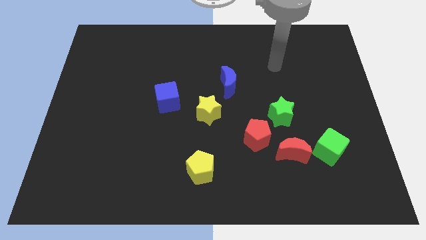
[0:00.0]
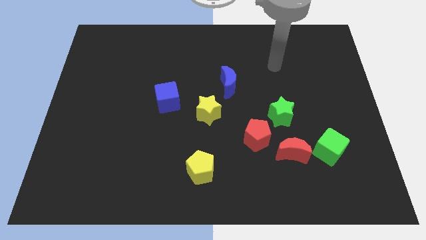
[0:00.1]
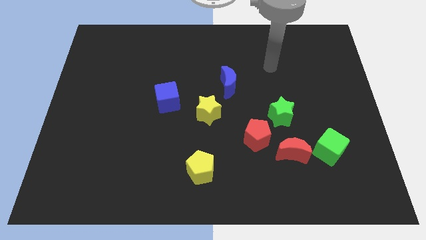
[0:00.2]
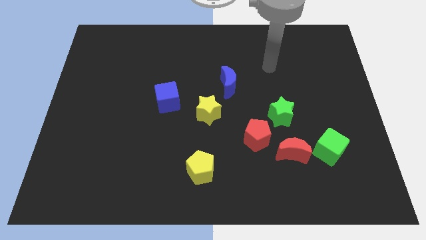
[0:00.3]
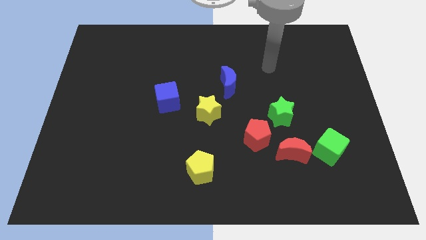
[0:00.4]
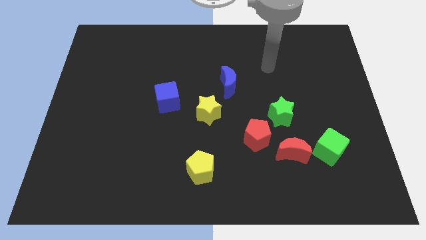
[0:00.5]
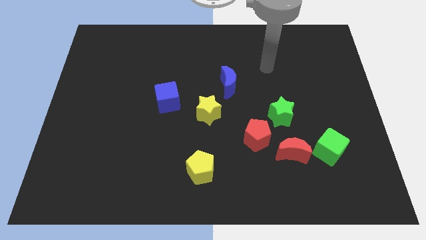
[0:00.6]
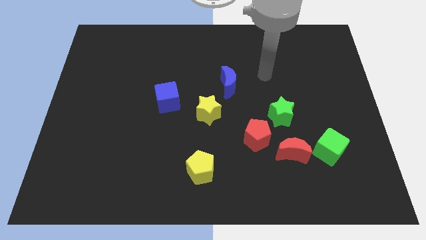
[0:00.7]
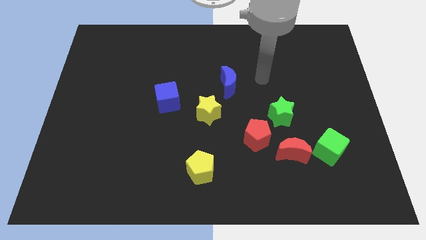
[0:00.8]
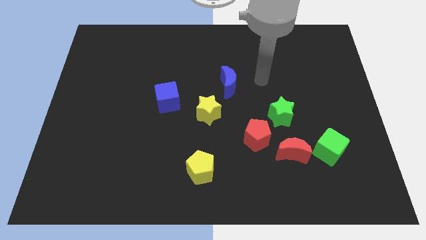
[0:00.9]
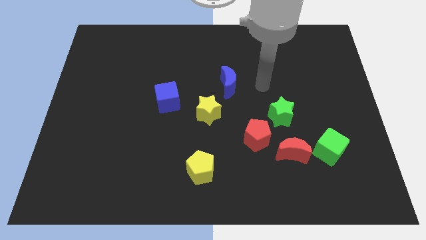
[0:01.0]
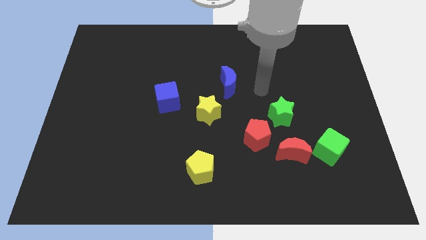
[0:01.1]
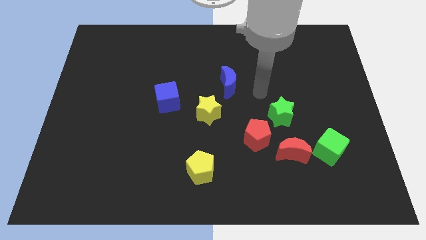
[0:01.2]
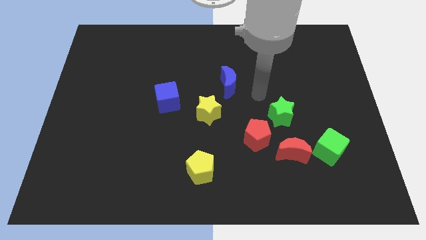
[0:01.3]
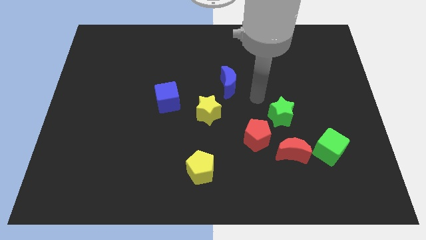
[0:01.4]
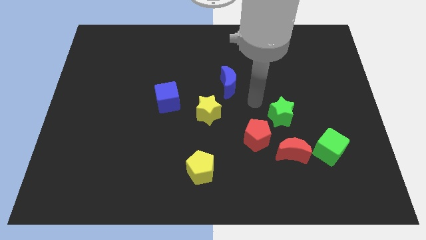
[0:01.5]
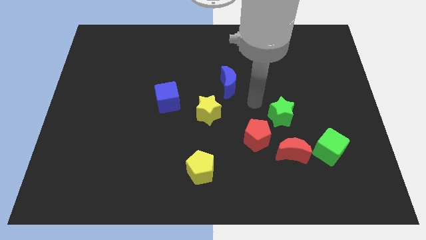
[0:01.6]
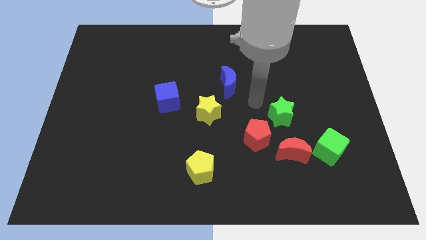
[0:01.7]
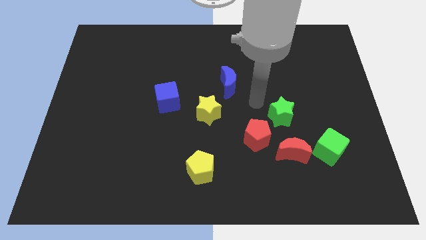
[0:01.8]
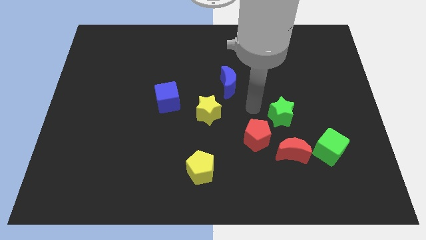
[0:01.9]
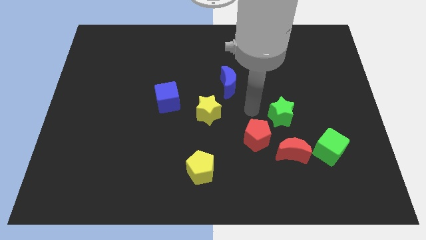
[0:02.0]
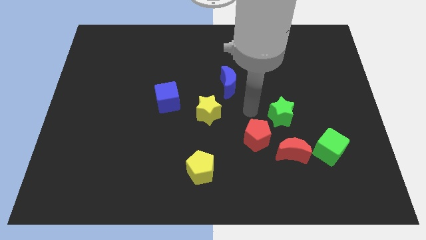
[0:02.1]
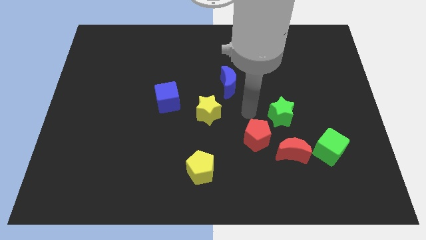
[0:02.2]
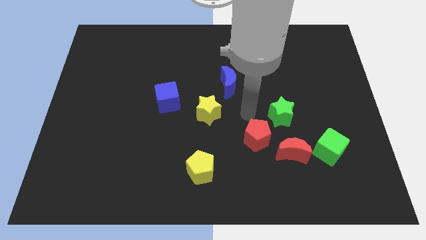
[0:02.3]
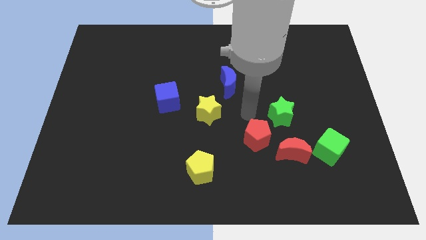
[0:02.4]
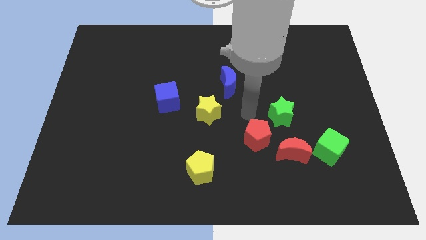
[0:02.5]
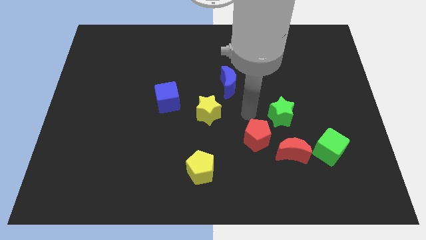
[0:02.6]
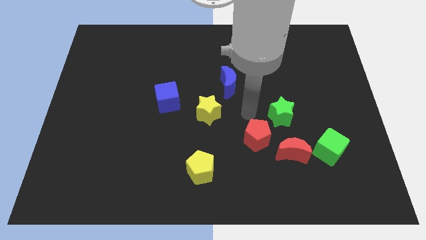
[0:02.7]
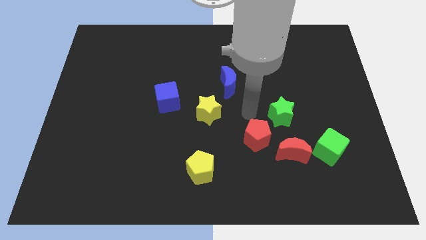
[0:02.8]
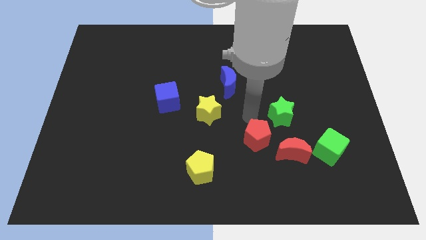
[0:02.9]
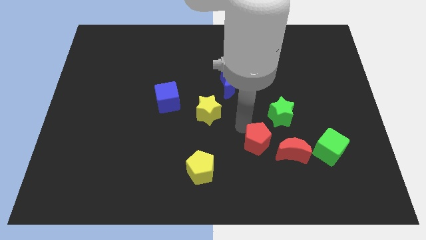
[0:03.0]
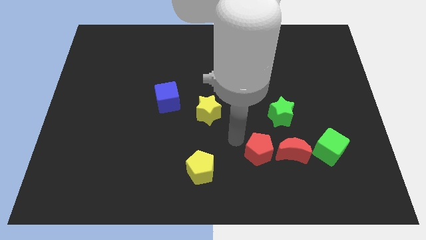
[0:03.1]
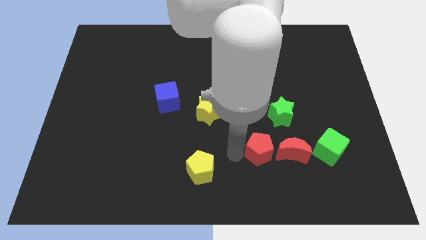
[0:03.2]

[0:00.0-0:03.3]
push the red pentagon slightly to the bottom

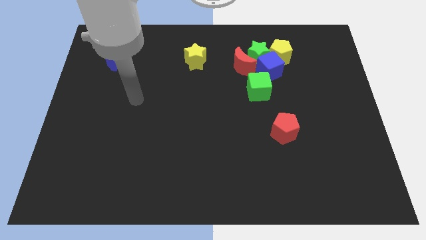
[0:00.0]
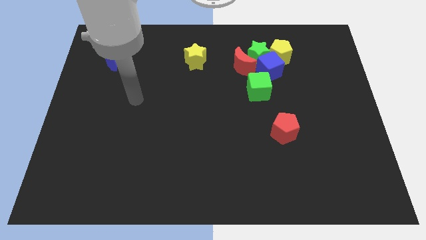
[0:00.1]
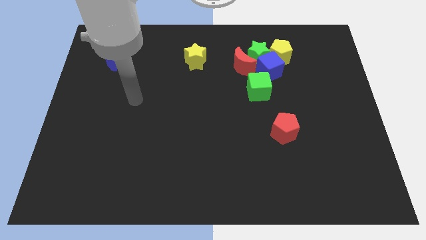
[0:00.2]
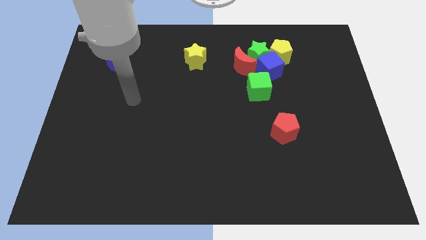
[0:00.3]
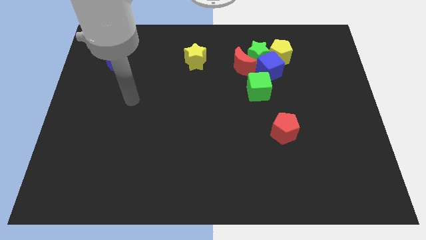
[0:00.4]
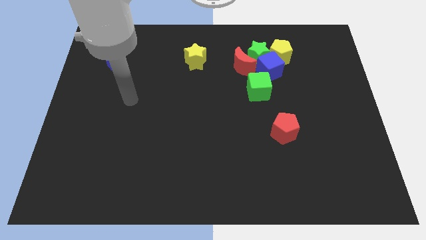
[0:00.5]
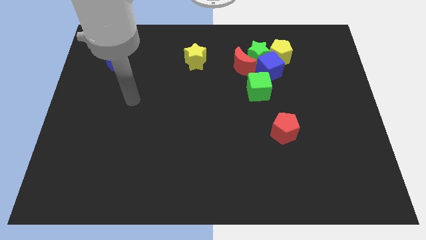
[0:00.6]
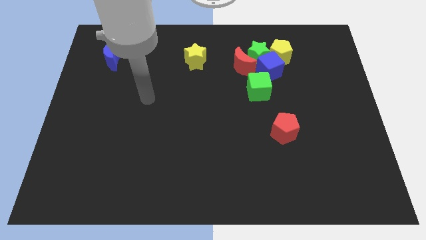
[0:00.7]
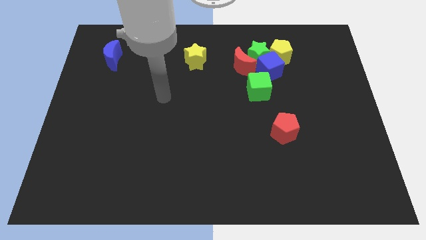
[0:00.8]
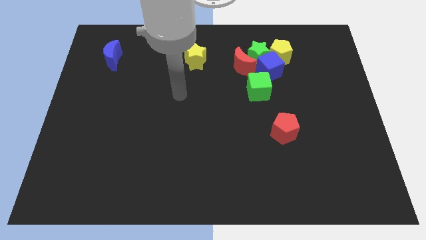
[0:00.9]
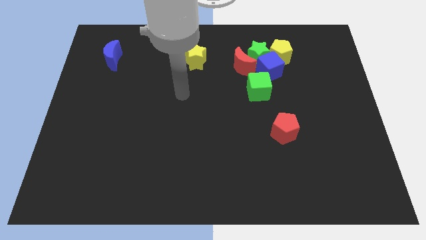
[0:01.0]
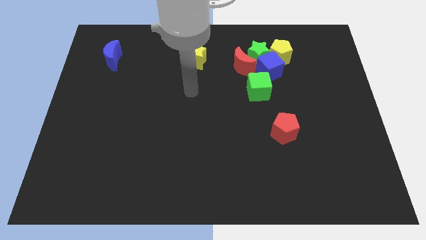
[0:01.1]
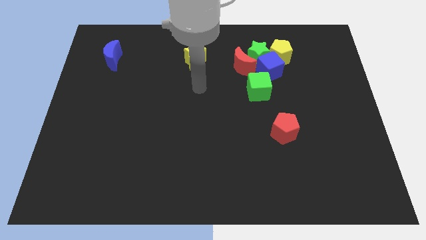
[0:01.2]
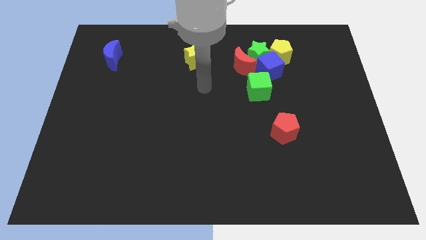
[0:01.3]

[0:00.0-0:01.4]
put your arm at the center of the board

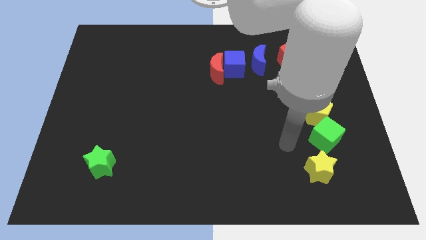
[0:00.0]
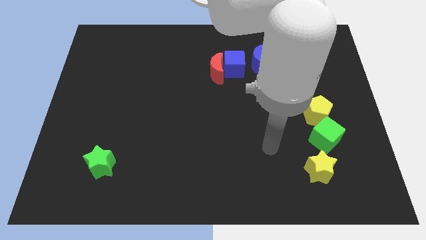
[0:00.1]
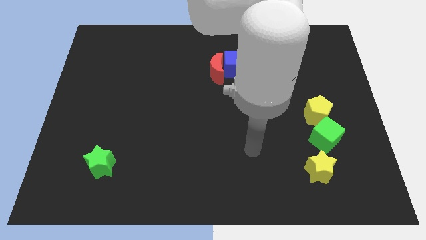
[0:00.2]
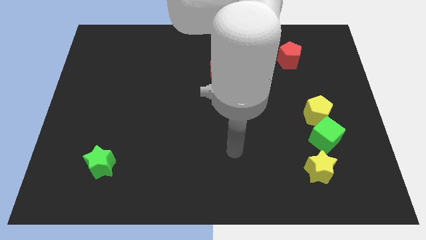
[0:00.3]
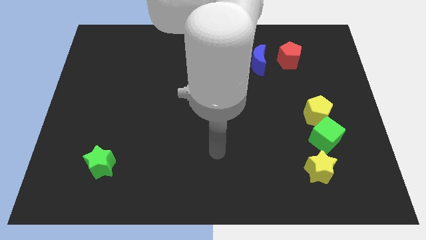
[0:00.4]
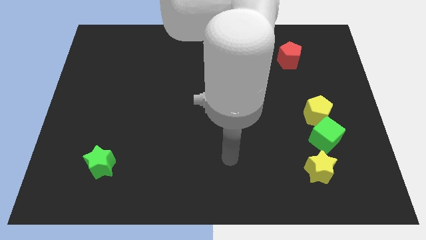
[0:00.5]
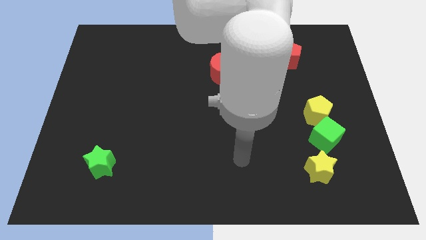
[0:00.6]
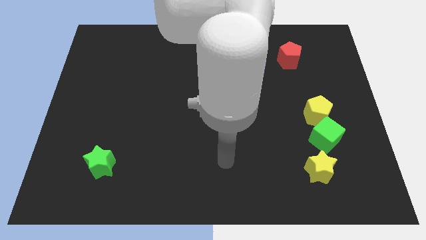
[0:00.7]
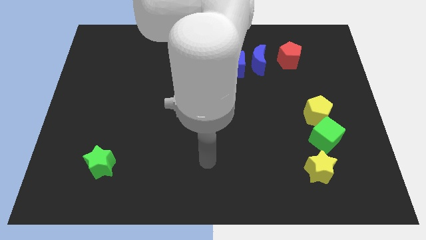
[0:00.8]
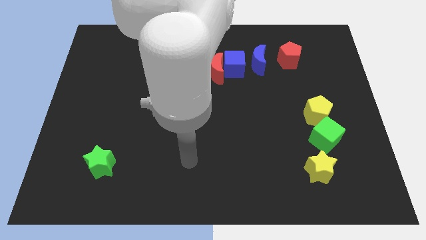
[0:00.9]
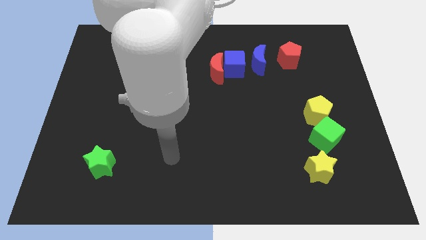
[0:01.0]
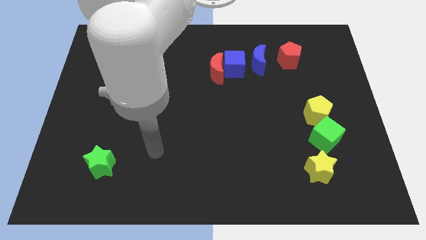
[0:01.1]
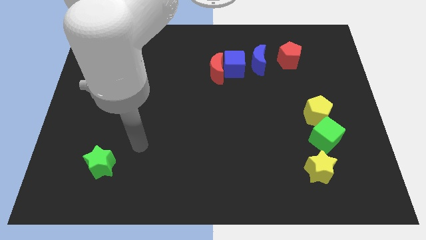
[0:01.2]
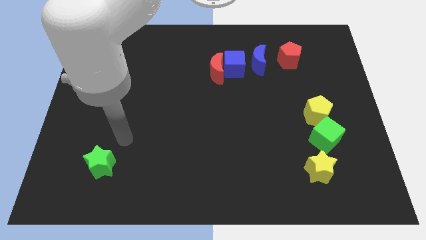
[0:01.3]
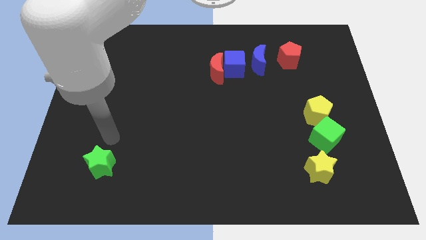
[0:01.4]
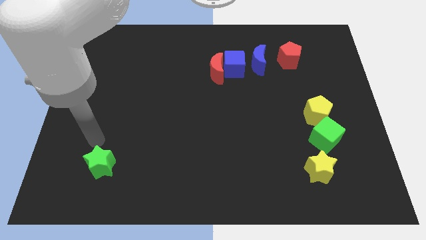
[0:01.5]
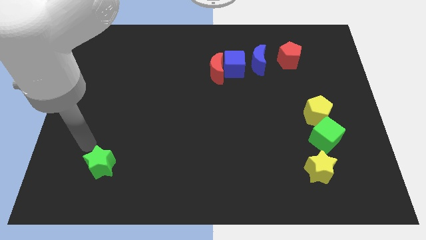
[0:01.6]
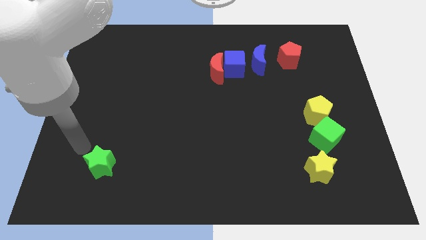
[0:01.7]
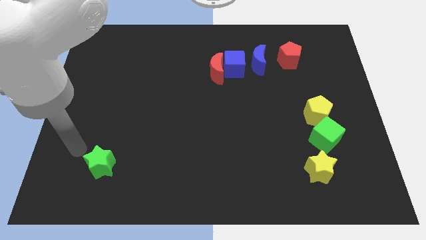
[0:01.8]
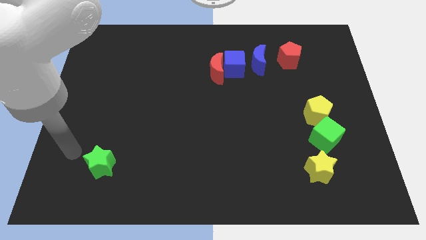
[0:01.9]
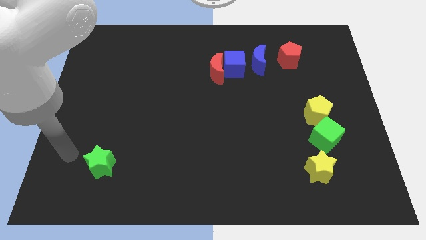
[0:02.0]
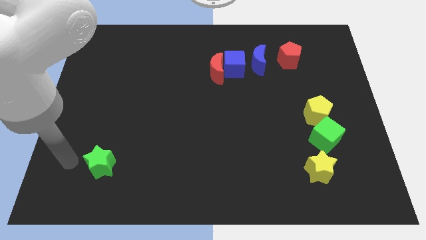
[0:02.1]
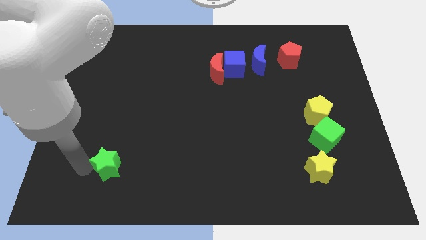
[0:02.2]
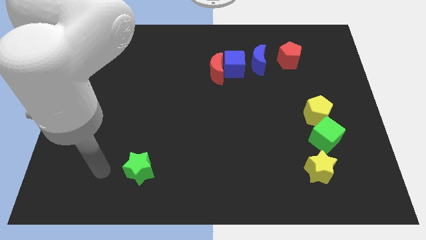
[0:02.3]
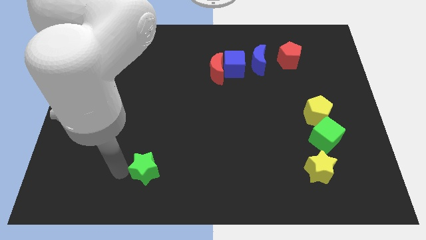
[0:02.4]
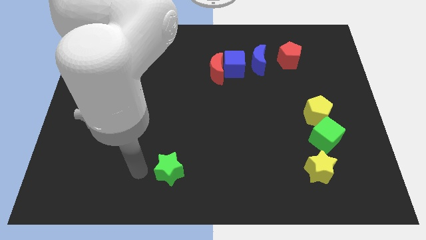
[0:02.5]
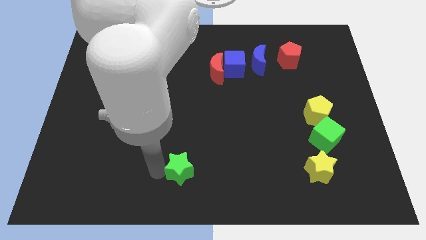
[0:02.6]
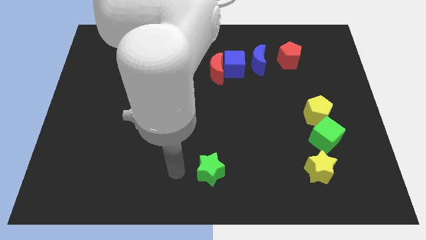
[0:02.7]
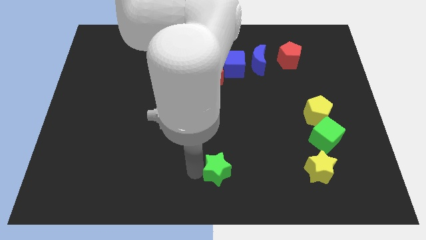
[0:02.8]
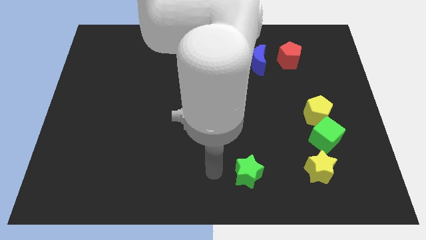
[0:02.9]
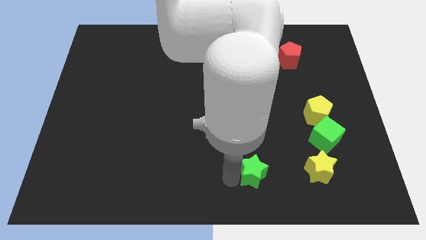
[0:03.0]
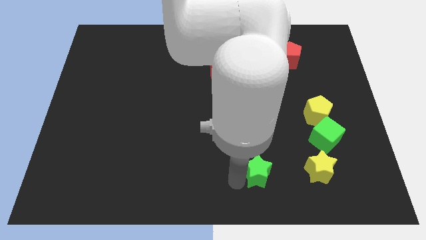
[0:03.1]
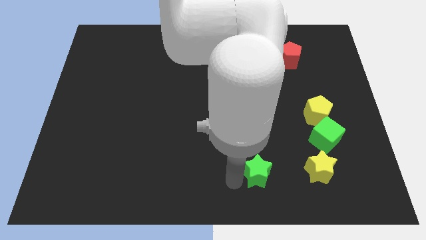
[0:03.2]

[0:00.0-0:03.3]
slide the green star towards the left side of the yellow star

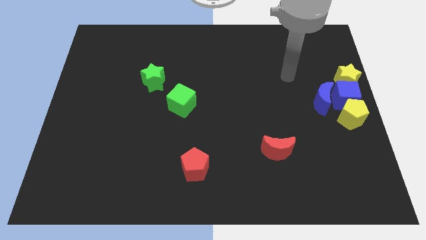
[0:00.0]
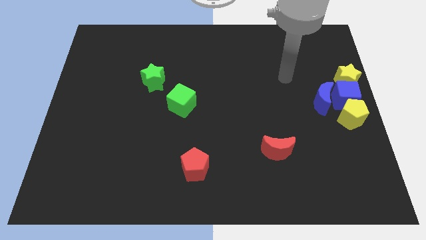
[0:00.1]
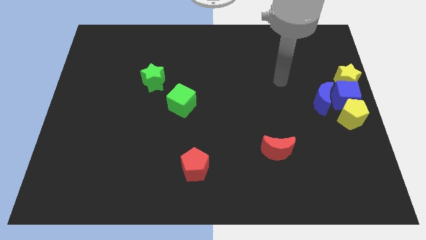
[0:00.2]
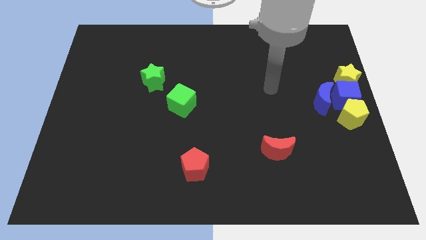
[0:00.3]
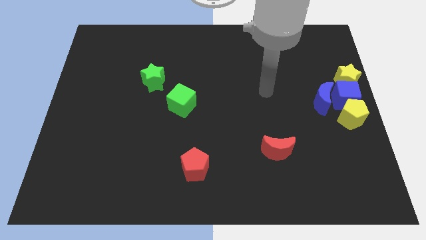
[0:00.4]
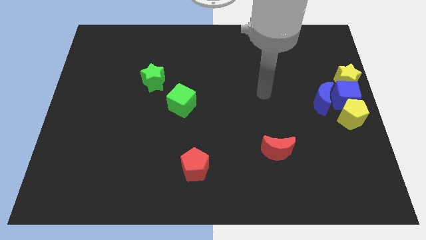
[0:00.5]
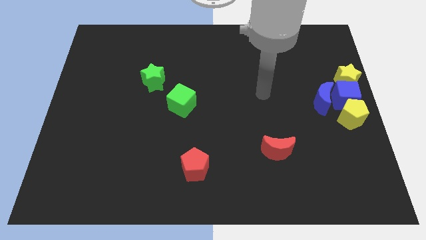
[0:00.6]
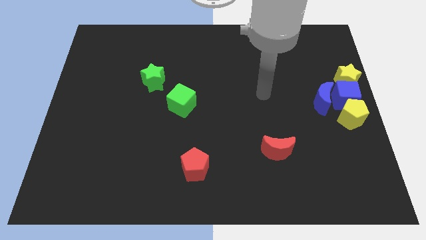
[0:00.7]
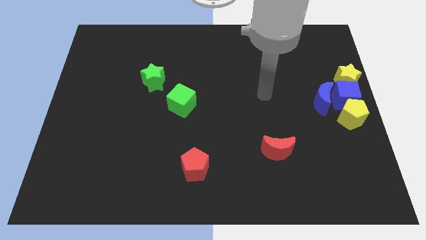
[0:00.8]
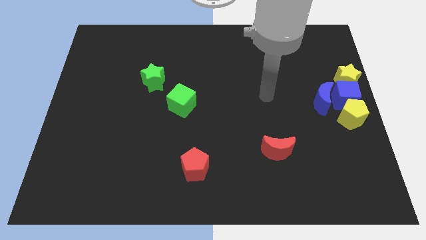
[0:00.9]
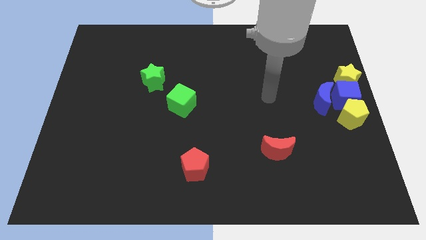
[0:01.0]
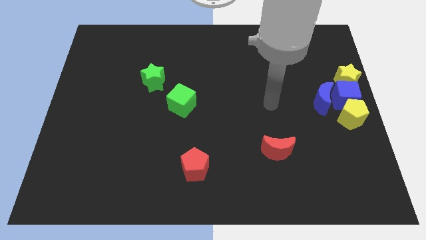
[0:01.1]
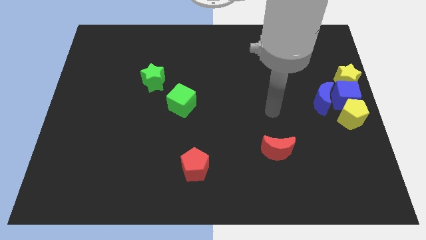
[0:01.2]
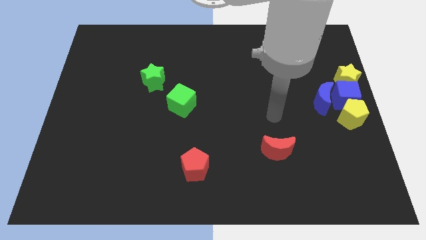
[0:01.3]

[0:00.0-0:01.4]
move your arm towards the red crescent
